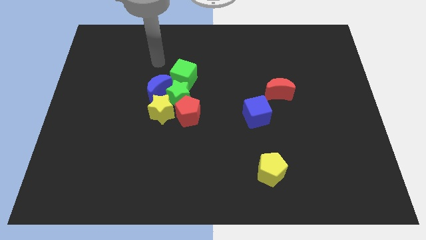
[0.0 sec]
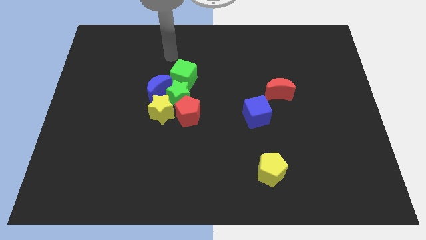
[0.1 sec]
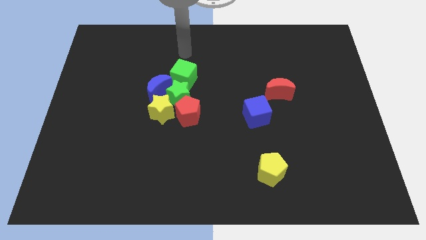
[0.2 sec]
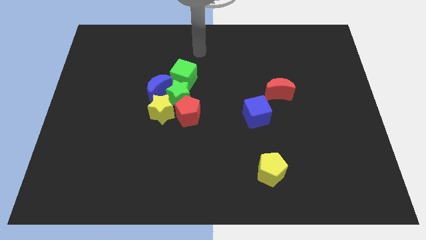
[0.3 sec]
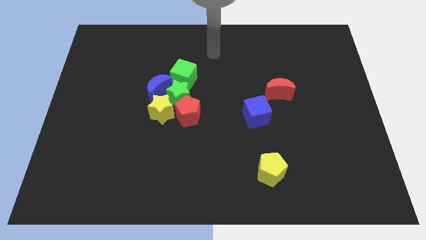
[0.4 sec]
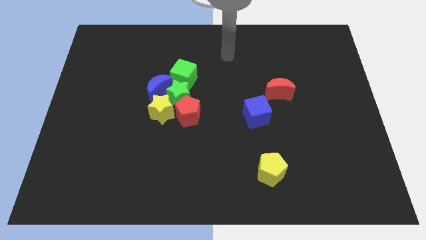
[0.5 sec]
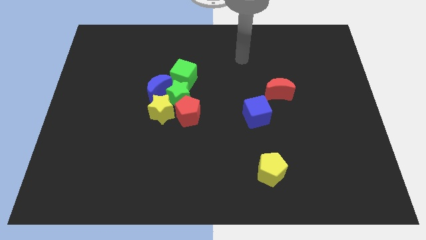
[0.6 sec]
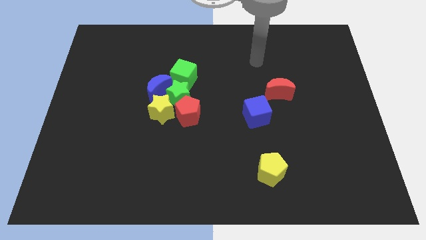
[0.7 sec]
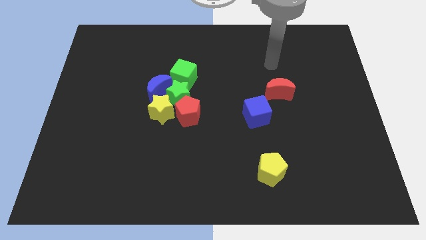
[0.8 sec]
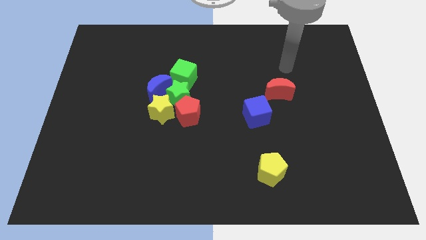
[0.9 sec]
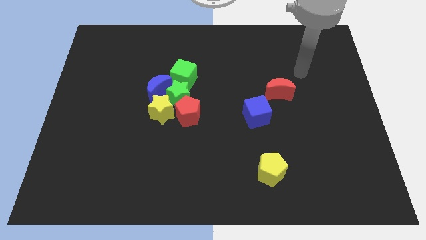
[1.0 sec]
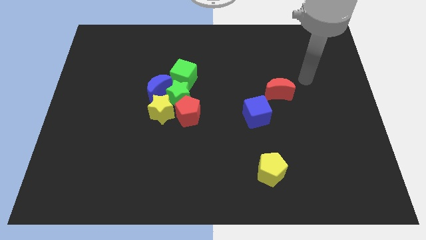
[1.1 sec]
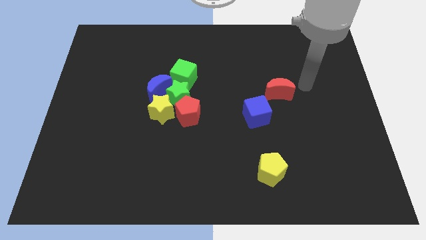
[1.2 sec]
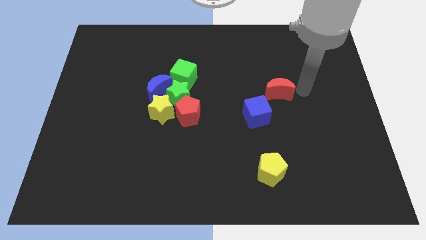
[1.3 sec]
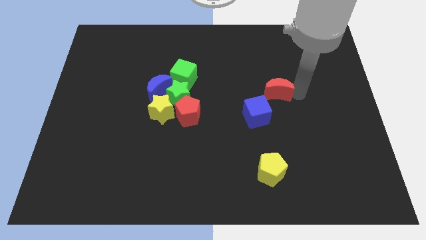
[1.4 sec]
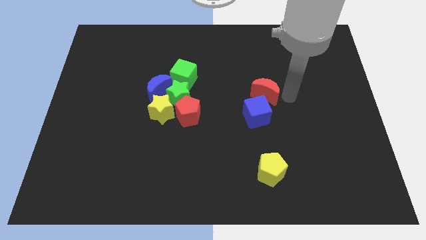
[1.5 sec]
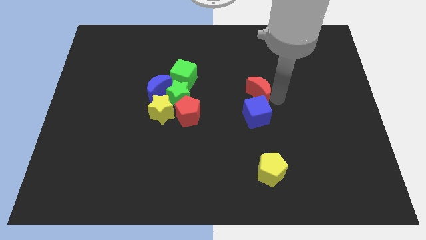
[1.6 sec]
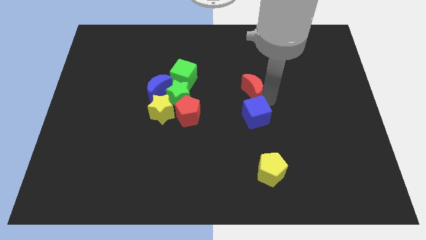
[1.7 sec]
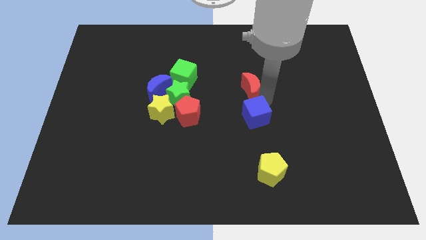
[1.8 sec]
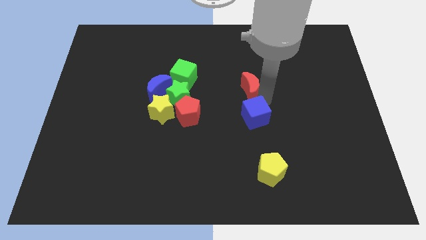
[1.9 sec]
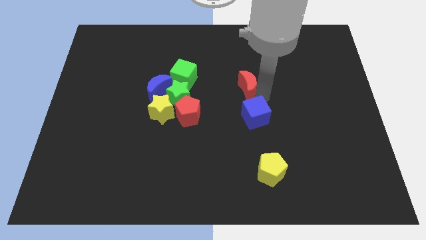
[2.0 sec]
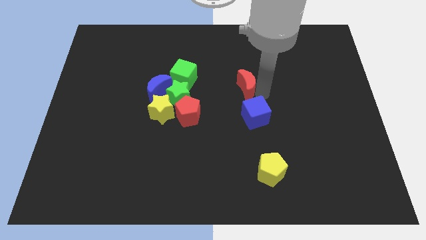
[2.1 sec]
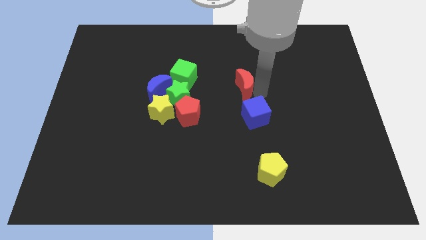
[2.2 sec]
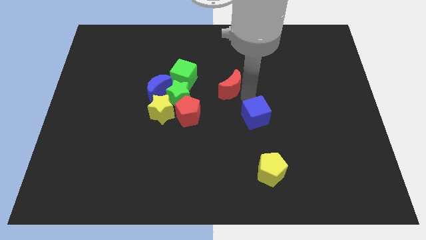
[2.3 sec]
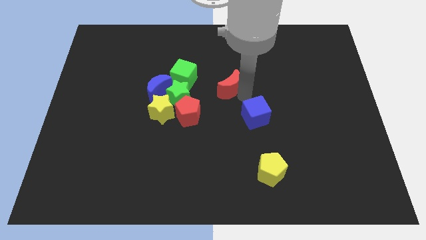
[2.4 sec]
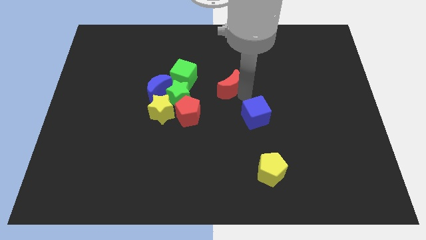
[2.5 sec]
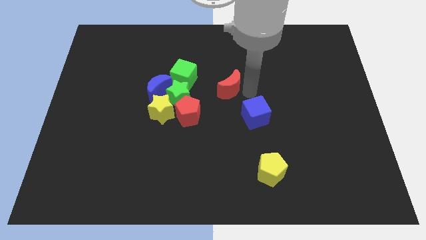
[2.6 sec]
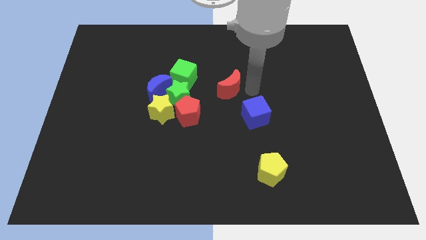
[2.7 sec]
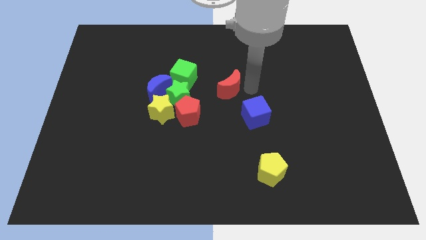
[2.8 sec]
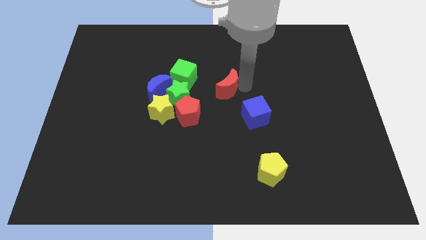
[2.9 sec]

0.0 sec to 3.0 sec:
place the red moon diagonal top right to red pentagon

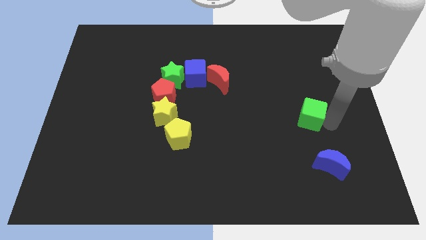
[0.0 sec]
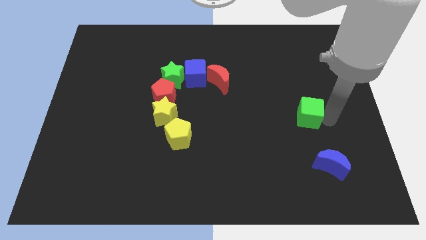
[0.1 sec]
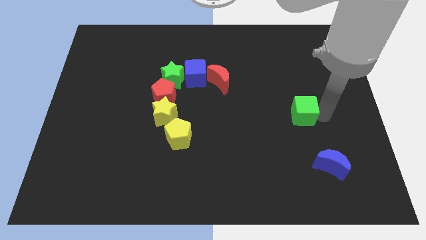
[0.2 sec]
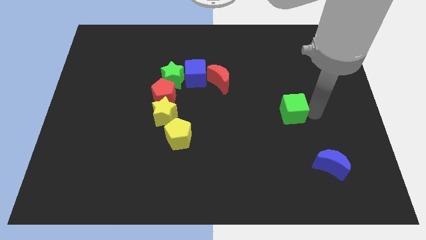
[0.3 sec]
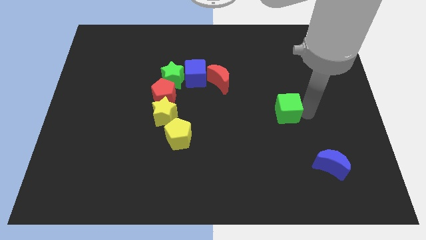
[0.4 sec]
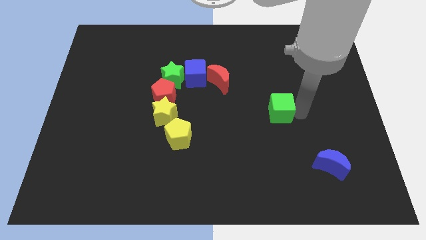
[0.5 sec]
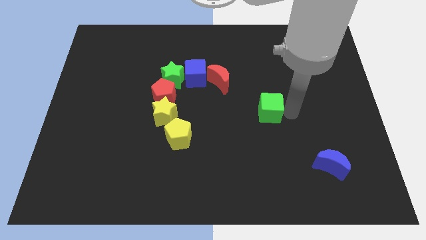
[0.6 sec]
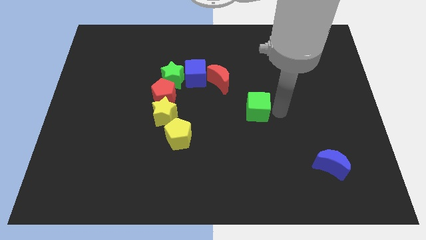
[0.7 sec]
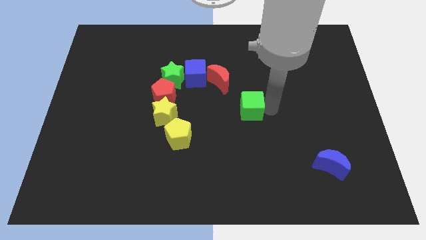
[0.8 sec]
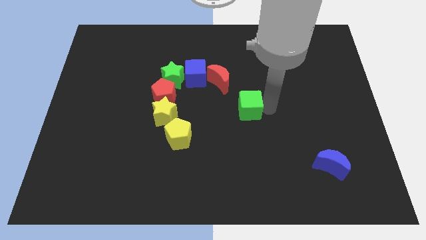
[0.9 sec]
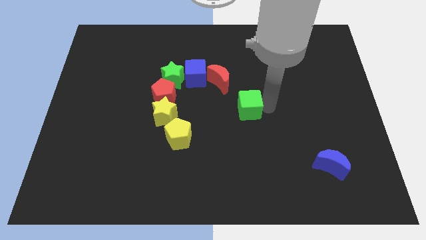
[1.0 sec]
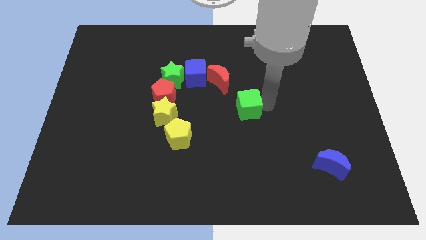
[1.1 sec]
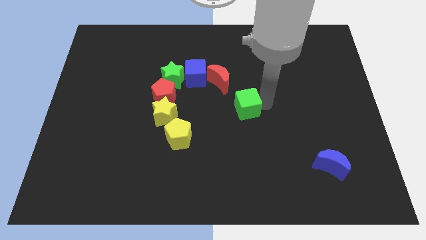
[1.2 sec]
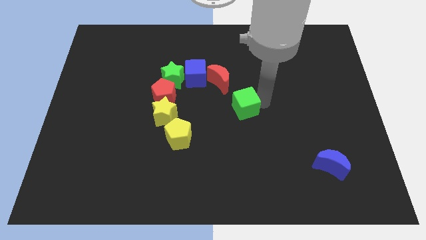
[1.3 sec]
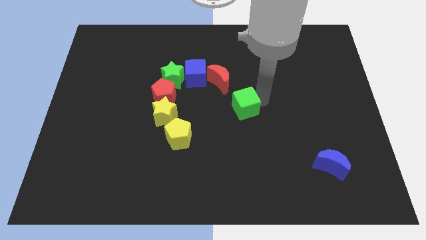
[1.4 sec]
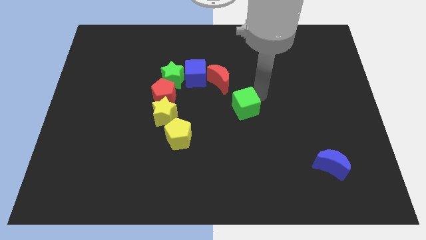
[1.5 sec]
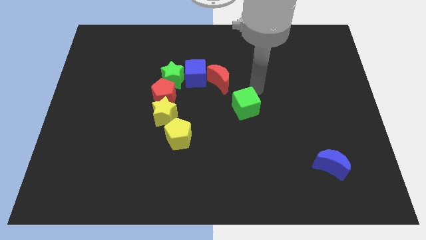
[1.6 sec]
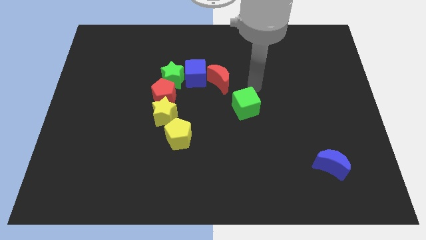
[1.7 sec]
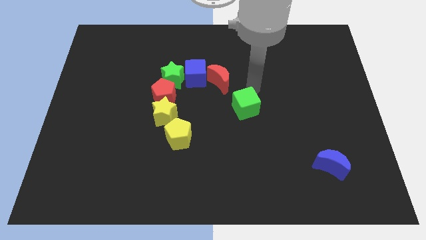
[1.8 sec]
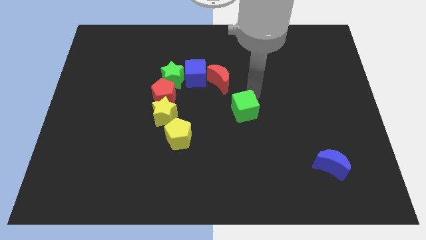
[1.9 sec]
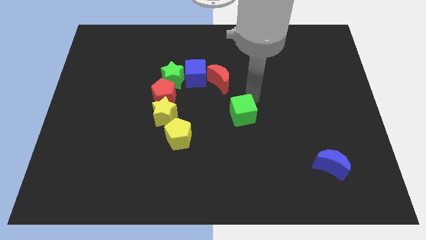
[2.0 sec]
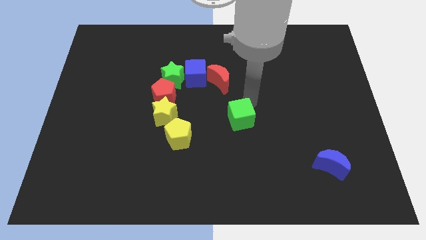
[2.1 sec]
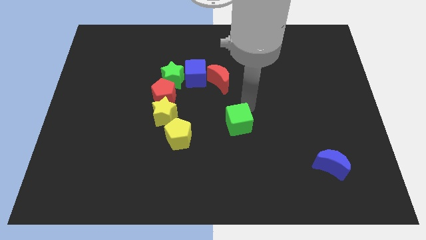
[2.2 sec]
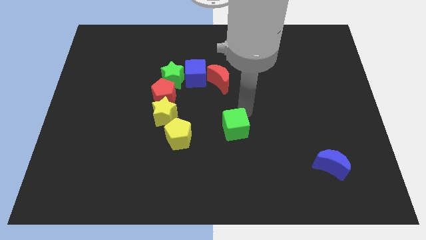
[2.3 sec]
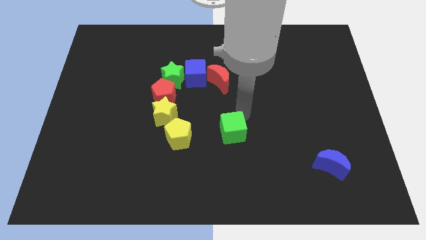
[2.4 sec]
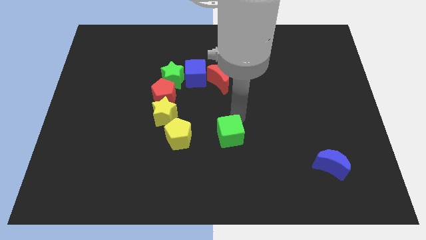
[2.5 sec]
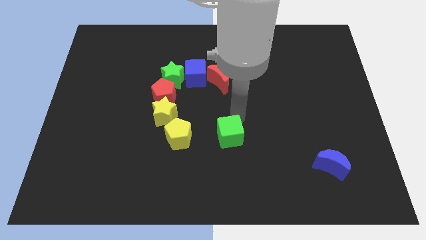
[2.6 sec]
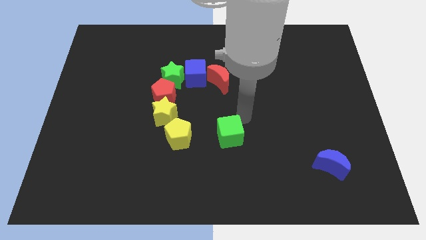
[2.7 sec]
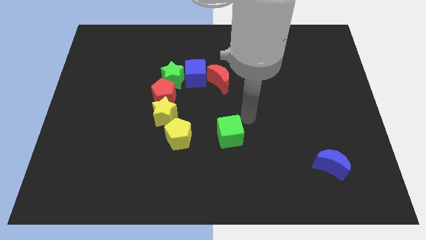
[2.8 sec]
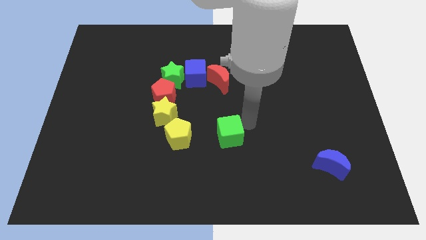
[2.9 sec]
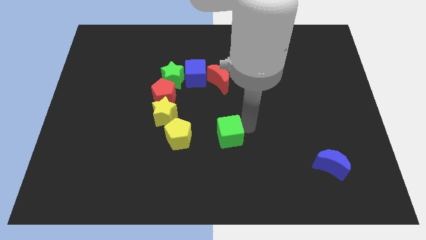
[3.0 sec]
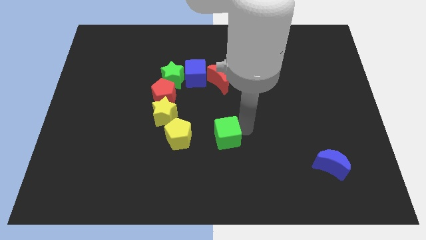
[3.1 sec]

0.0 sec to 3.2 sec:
move the green cube to the right of the yellow pentagon

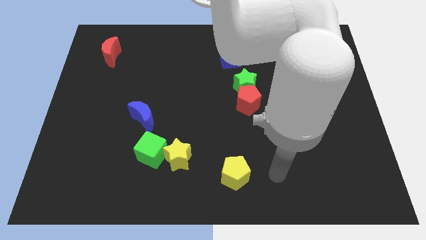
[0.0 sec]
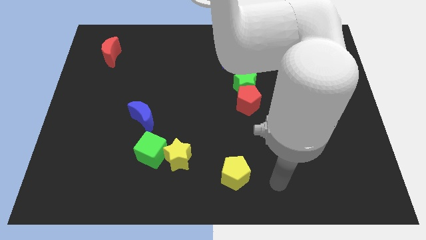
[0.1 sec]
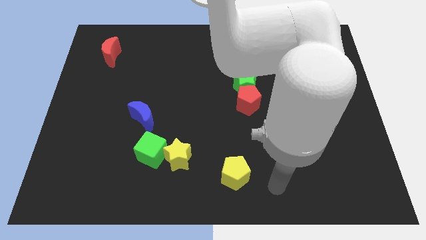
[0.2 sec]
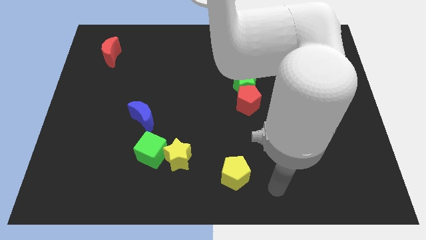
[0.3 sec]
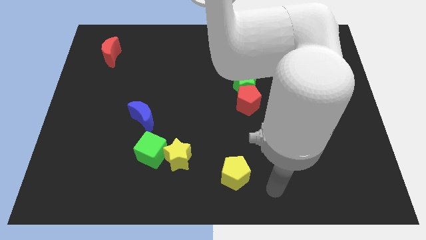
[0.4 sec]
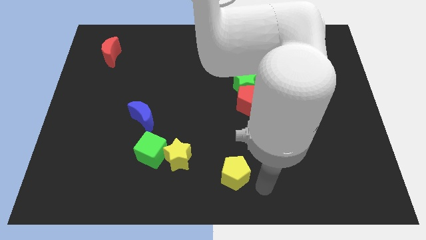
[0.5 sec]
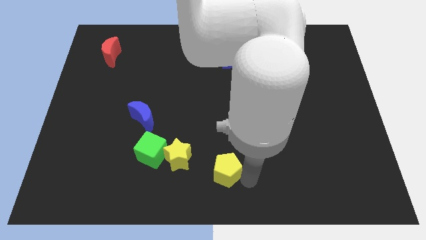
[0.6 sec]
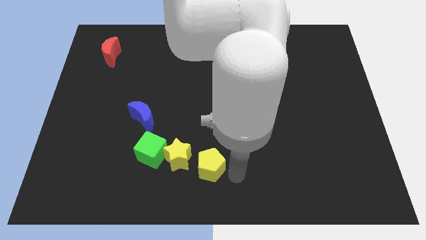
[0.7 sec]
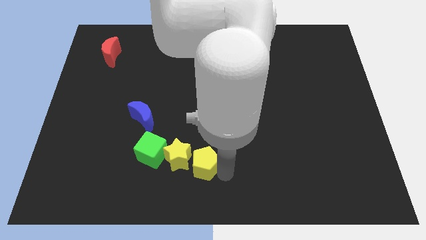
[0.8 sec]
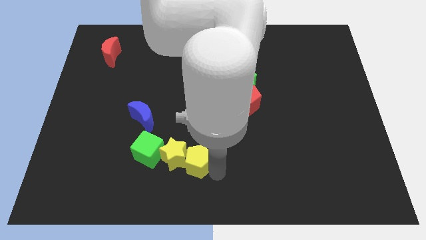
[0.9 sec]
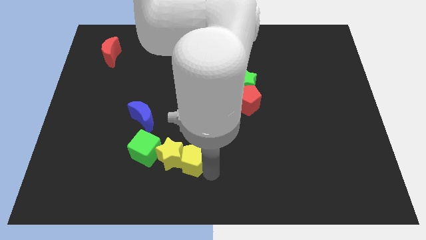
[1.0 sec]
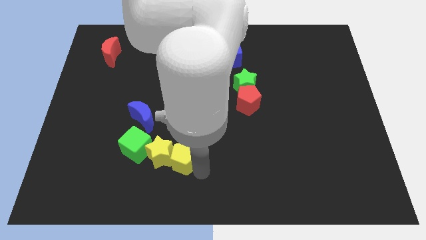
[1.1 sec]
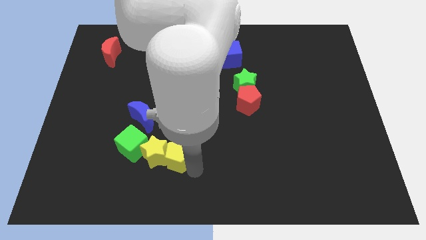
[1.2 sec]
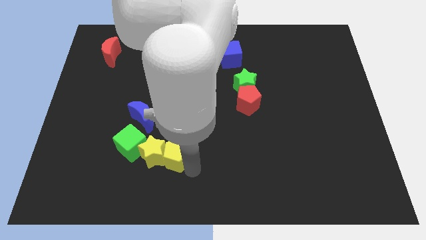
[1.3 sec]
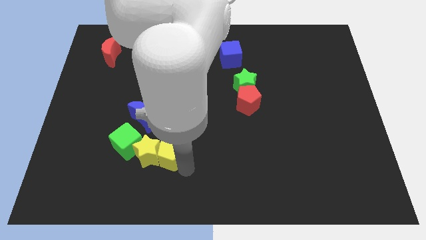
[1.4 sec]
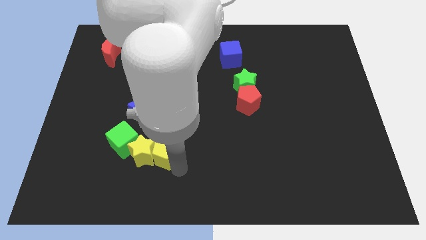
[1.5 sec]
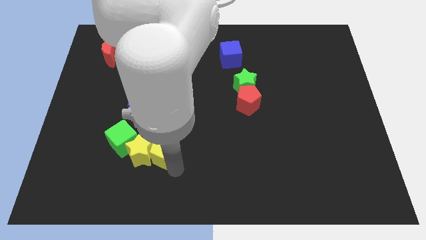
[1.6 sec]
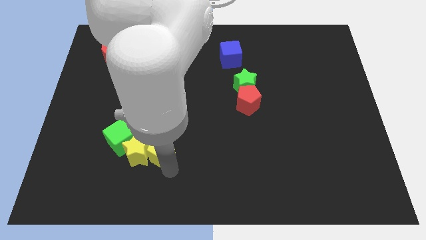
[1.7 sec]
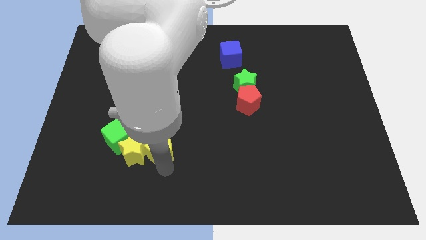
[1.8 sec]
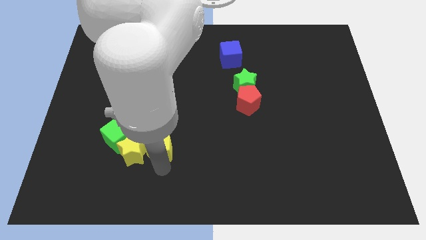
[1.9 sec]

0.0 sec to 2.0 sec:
push the yellow pentagon yellow star and green cube slightly to the left side of the board

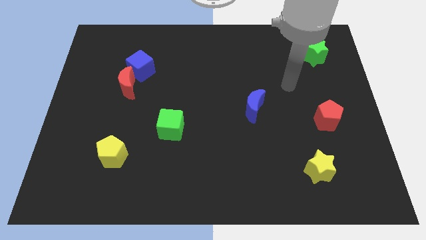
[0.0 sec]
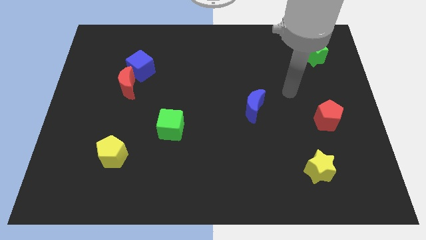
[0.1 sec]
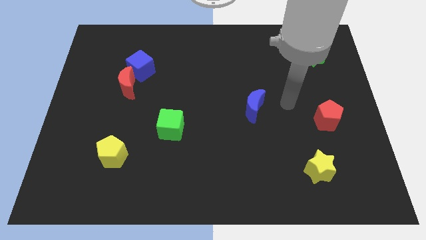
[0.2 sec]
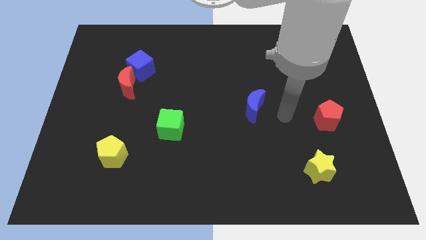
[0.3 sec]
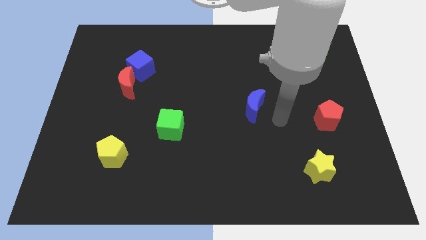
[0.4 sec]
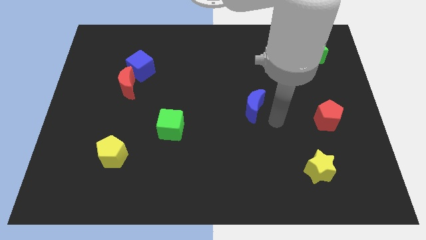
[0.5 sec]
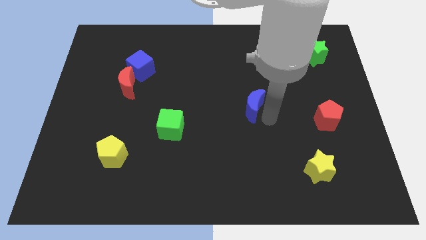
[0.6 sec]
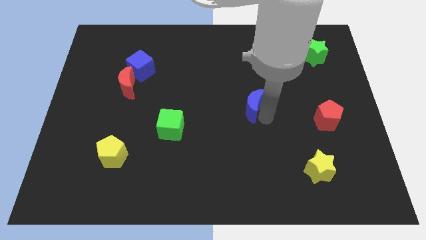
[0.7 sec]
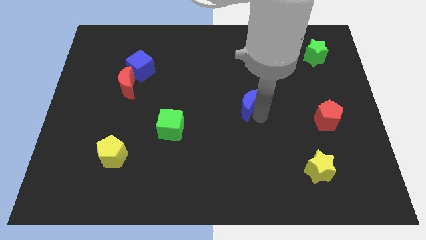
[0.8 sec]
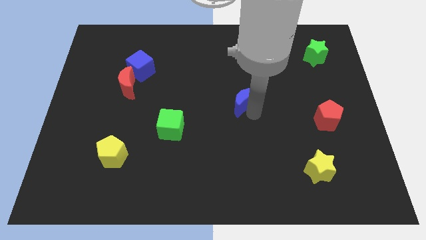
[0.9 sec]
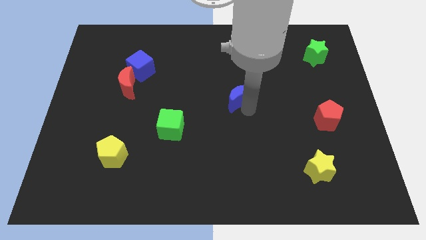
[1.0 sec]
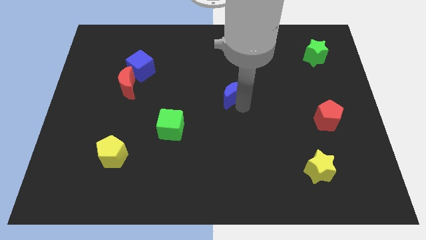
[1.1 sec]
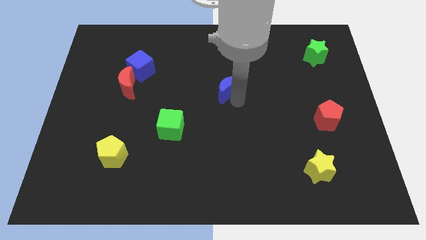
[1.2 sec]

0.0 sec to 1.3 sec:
move the blue crescent to the left side of the table
